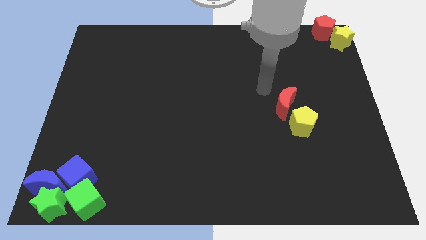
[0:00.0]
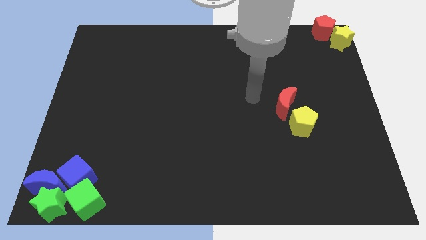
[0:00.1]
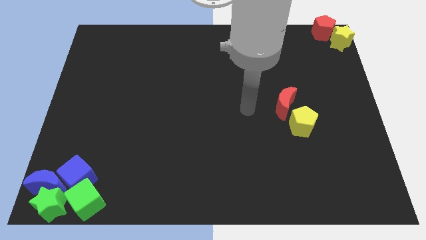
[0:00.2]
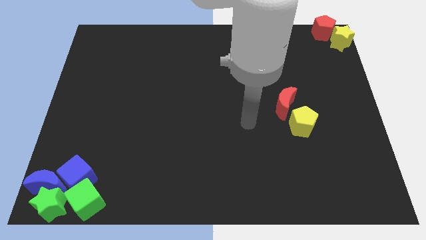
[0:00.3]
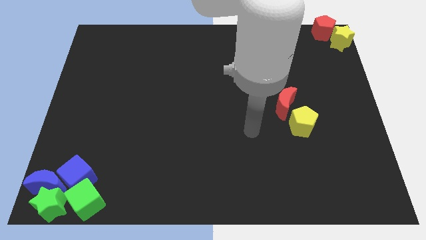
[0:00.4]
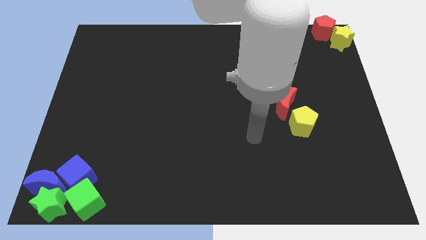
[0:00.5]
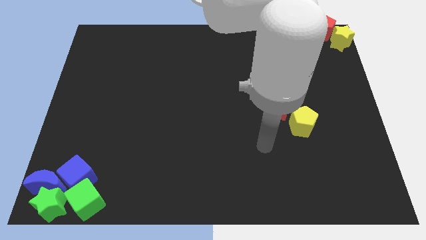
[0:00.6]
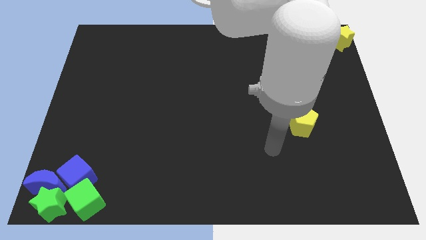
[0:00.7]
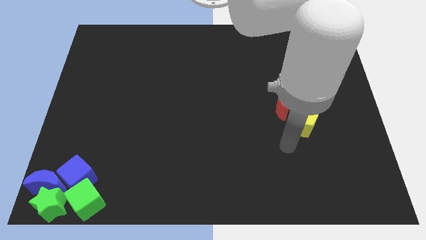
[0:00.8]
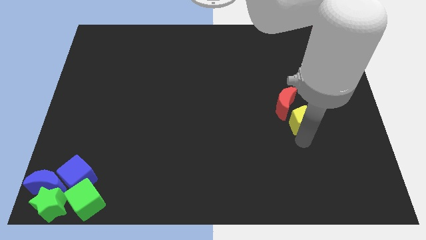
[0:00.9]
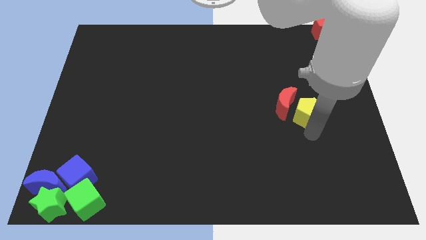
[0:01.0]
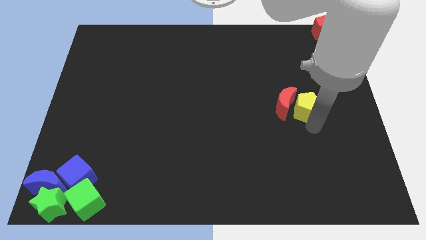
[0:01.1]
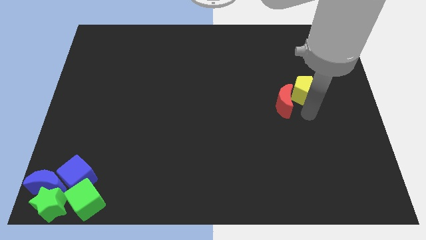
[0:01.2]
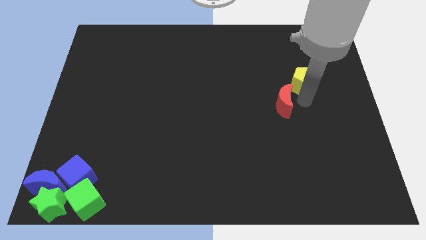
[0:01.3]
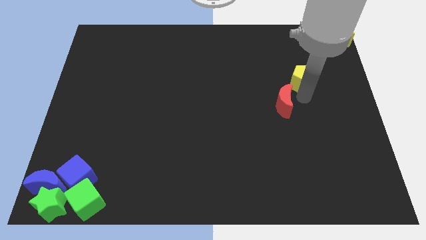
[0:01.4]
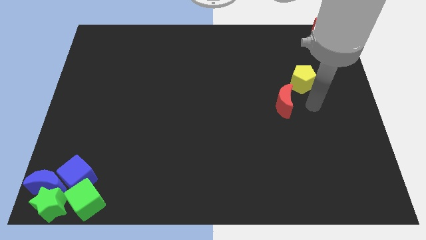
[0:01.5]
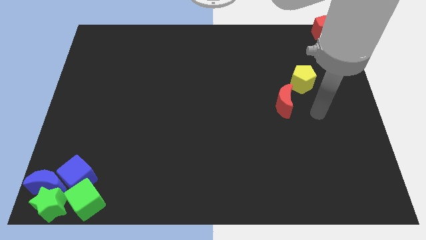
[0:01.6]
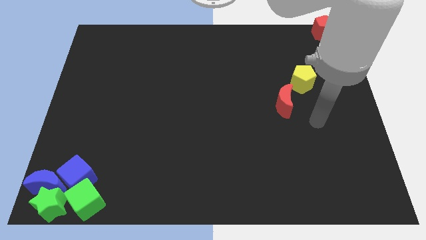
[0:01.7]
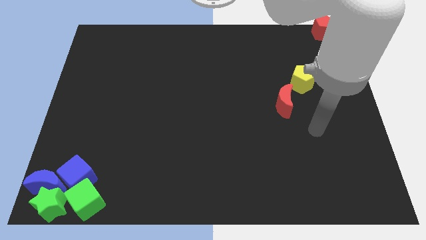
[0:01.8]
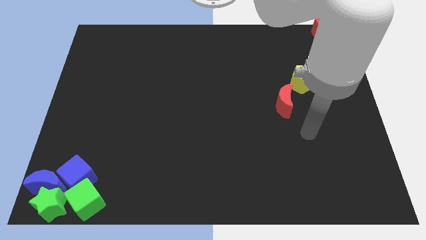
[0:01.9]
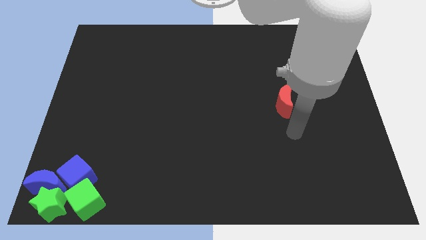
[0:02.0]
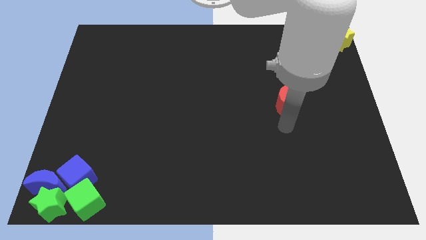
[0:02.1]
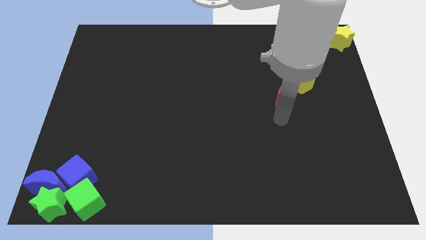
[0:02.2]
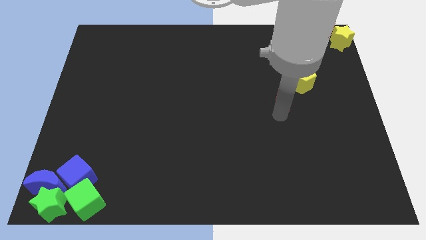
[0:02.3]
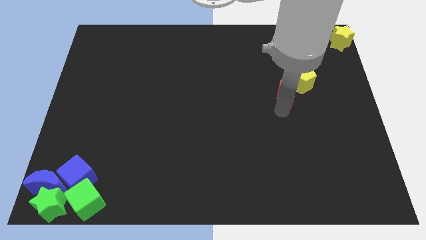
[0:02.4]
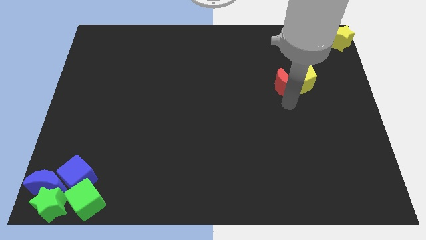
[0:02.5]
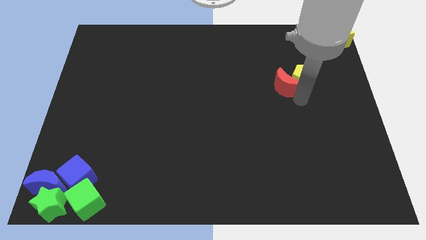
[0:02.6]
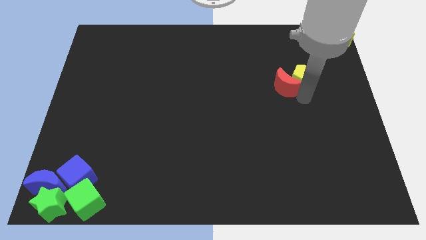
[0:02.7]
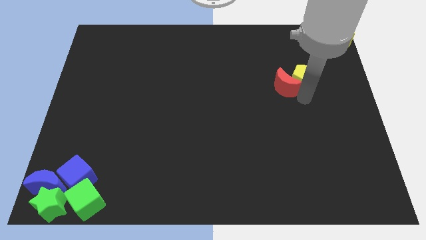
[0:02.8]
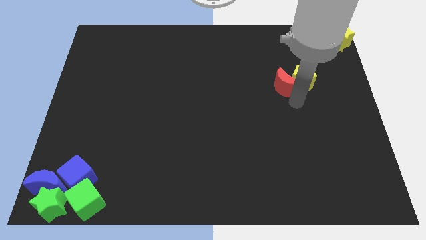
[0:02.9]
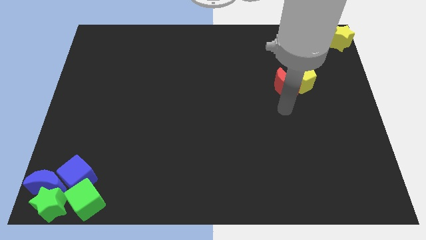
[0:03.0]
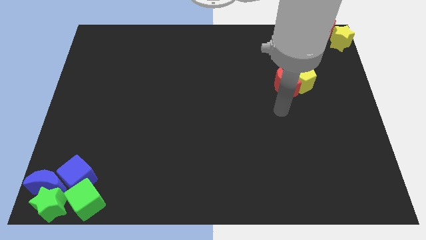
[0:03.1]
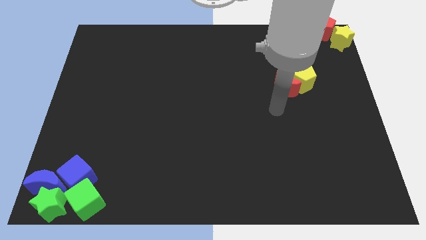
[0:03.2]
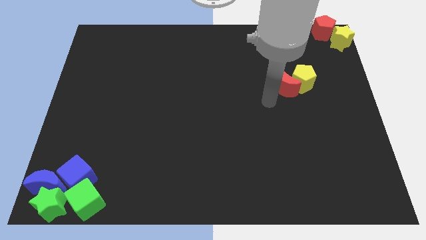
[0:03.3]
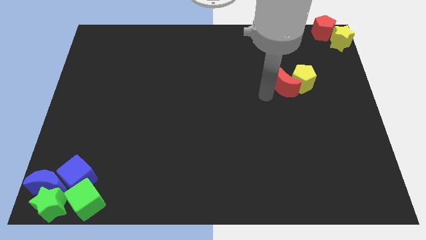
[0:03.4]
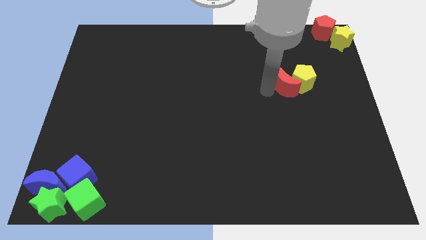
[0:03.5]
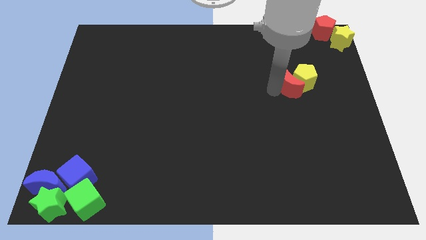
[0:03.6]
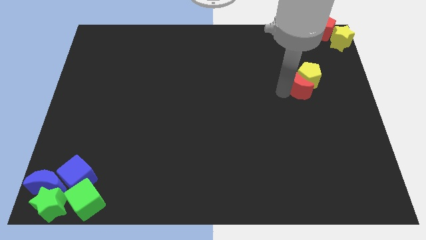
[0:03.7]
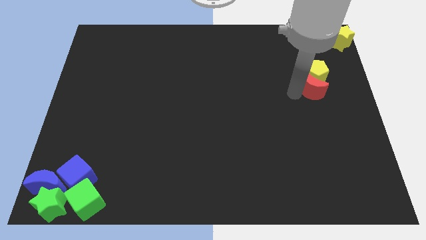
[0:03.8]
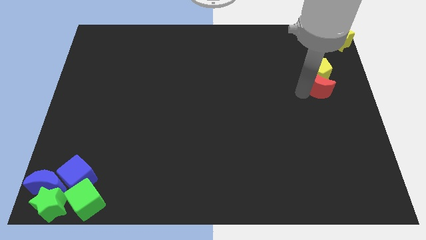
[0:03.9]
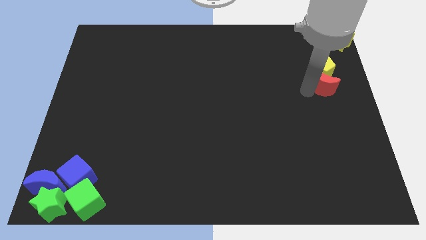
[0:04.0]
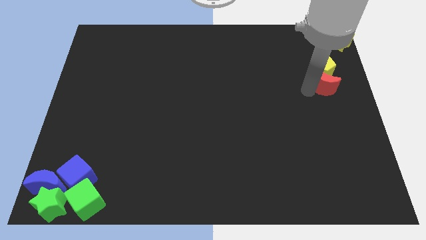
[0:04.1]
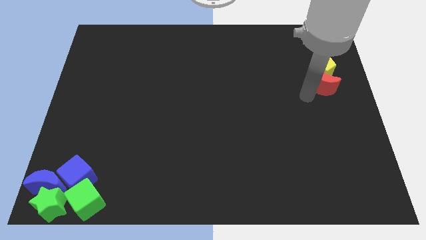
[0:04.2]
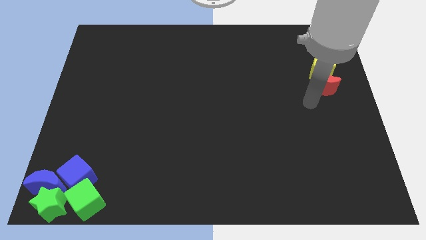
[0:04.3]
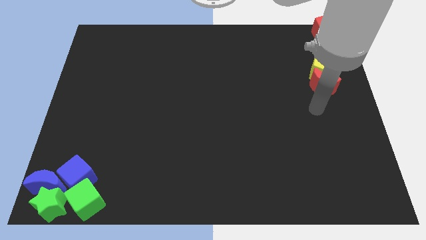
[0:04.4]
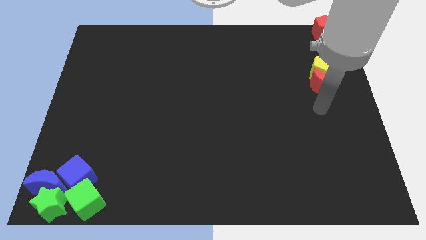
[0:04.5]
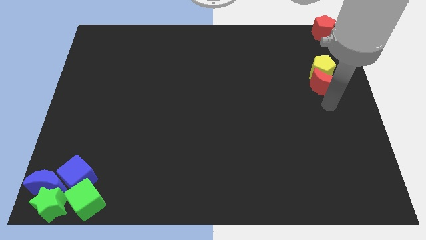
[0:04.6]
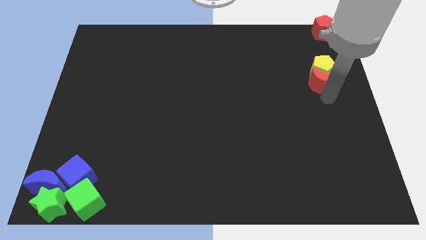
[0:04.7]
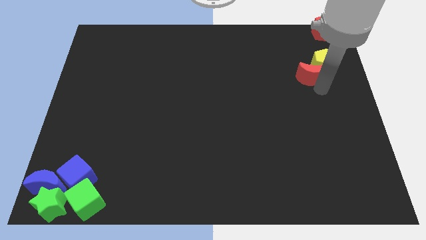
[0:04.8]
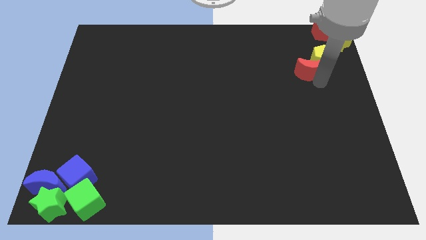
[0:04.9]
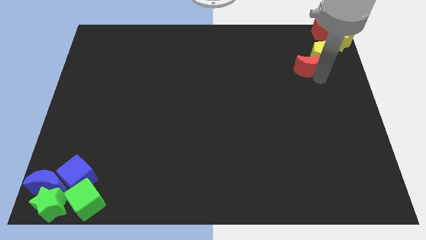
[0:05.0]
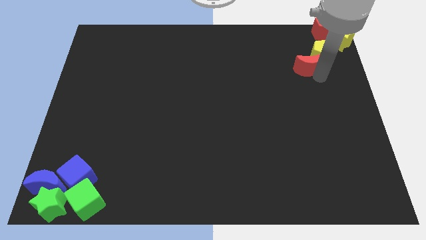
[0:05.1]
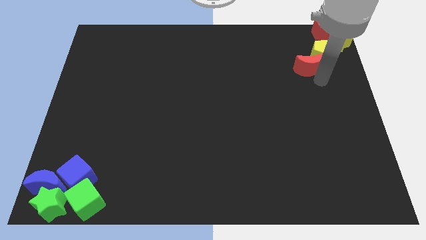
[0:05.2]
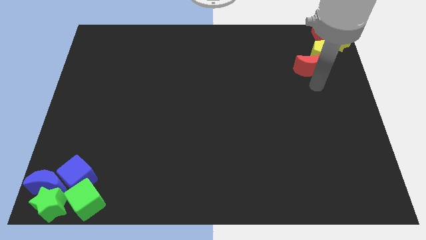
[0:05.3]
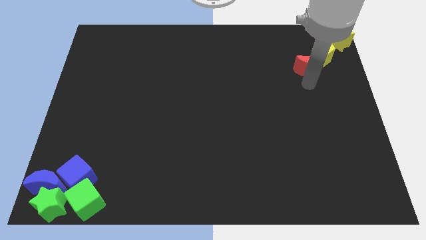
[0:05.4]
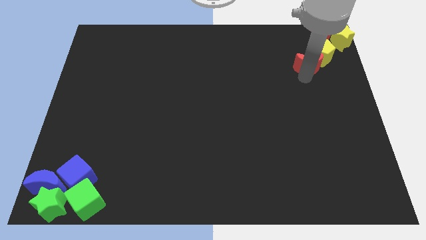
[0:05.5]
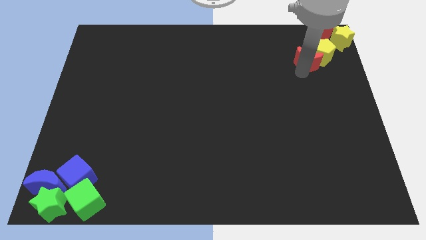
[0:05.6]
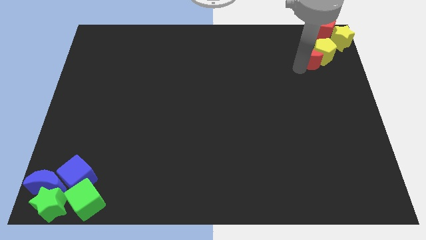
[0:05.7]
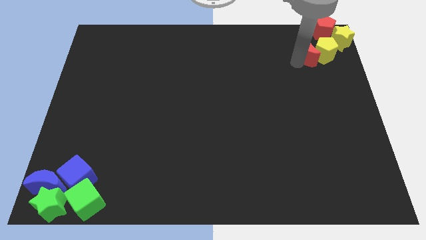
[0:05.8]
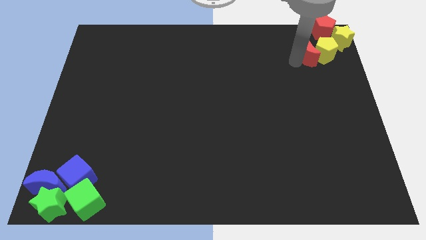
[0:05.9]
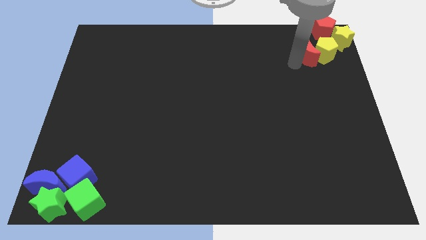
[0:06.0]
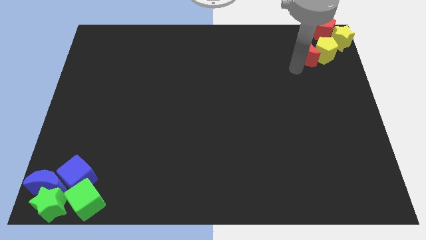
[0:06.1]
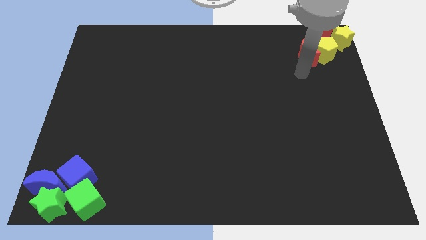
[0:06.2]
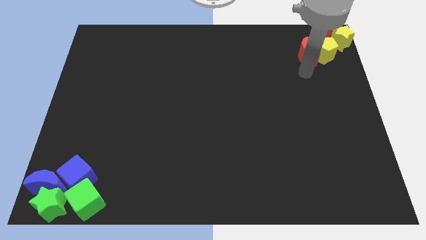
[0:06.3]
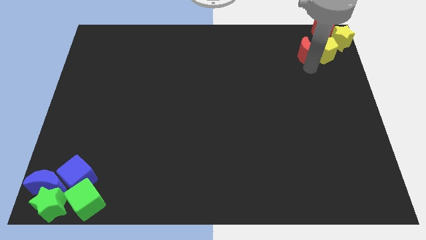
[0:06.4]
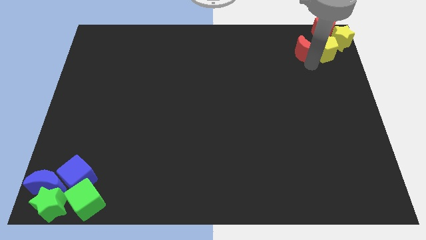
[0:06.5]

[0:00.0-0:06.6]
move the red moon and yellow pentagon to the yellow star and red pentagon

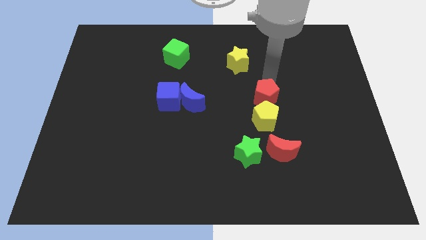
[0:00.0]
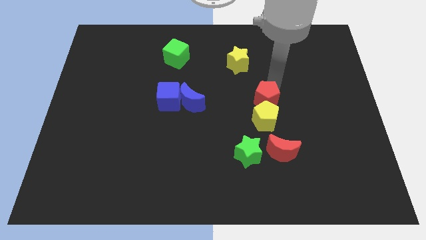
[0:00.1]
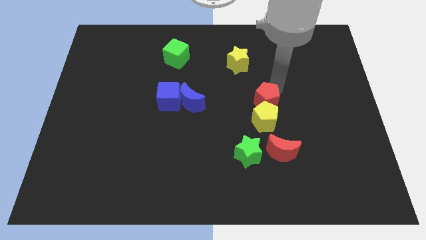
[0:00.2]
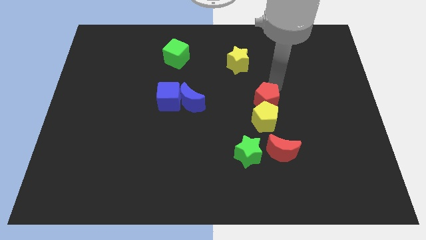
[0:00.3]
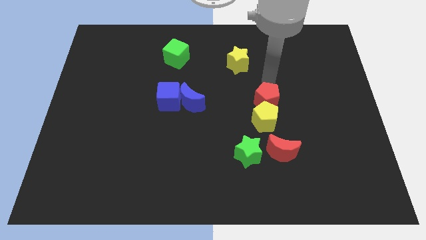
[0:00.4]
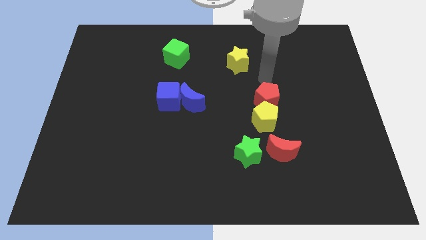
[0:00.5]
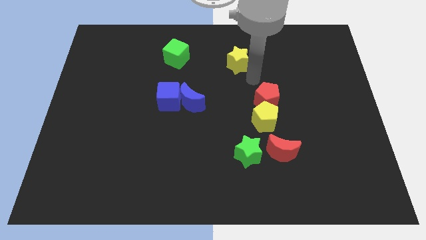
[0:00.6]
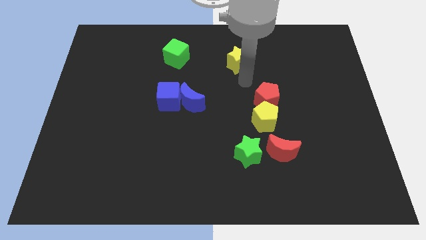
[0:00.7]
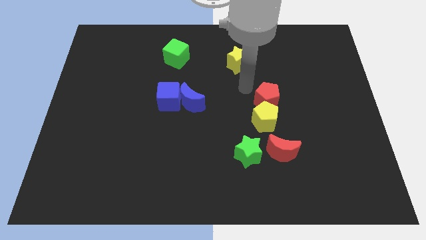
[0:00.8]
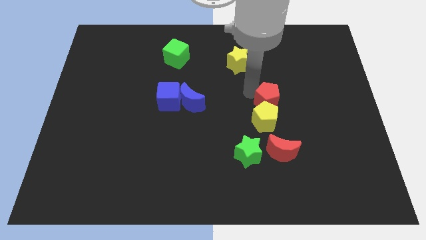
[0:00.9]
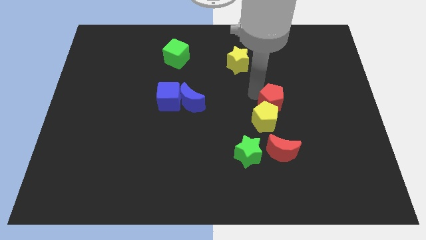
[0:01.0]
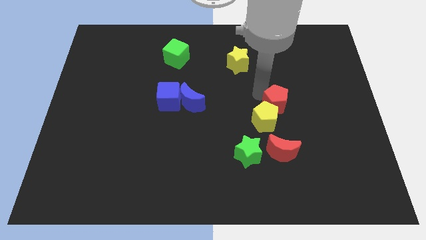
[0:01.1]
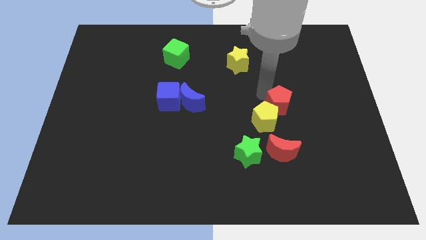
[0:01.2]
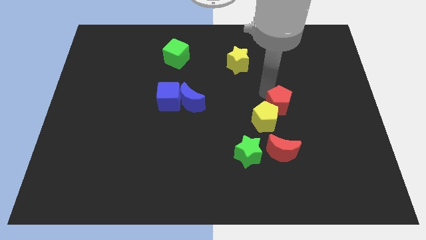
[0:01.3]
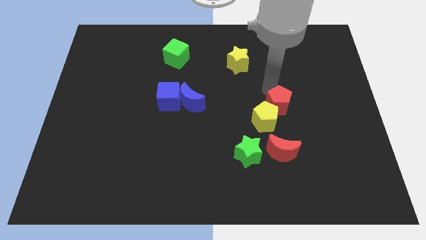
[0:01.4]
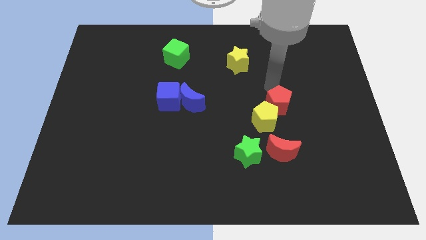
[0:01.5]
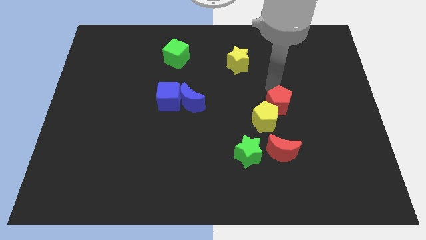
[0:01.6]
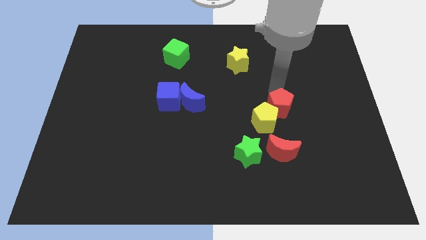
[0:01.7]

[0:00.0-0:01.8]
move red pentagon slightly to the right

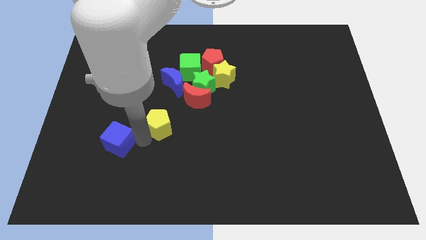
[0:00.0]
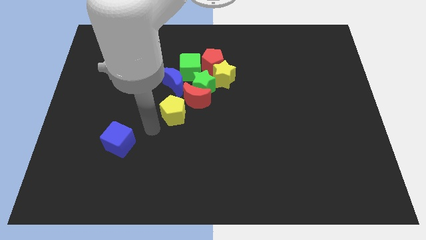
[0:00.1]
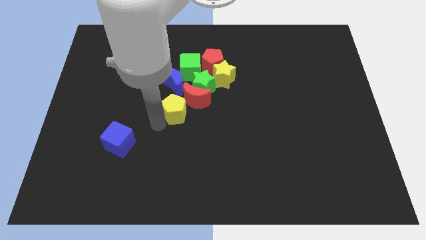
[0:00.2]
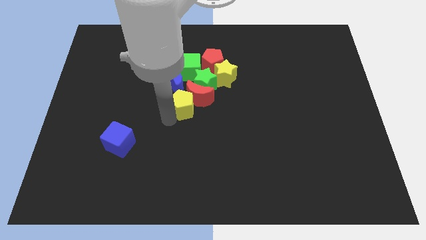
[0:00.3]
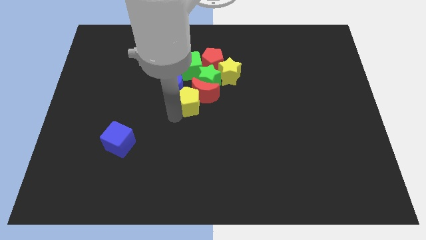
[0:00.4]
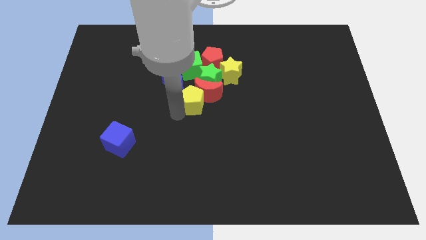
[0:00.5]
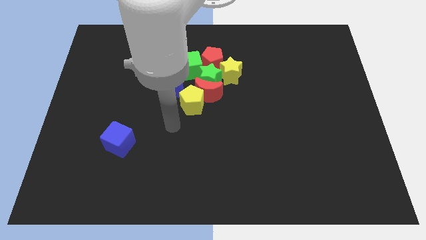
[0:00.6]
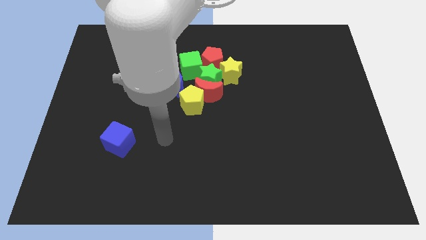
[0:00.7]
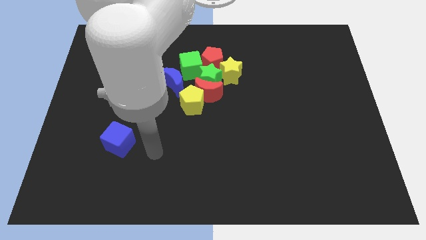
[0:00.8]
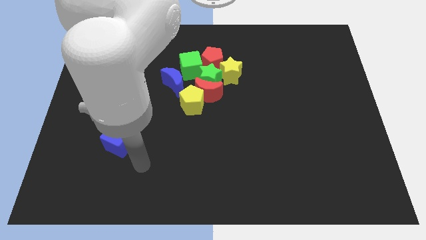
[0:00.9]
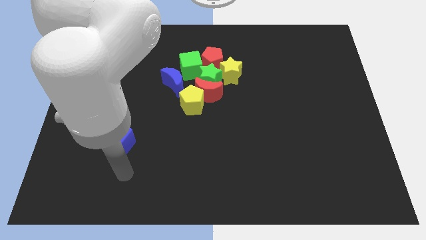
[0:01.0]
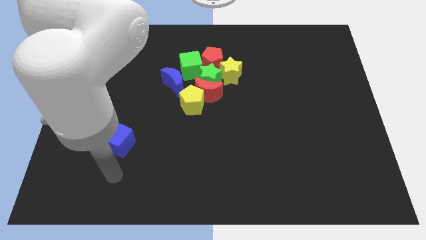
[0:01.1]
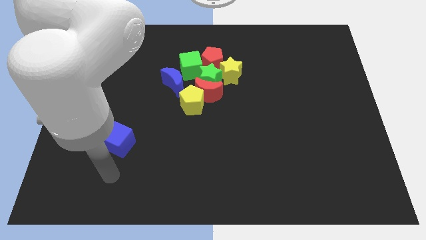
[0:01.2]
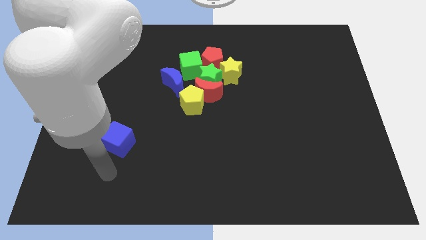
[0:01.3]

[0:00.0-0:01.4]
move the yellow pentagon into the red crescent
